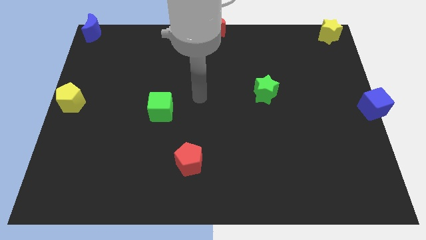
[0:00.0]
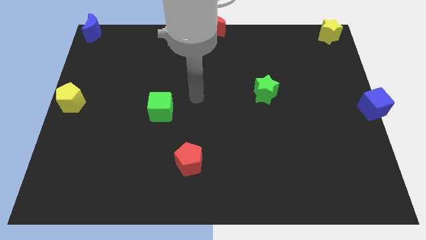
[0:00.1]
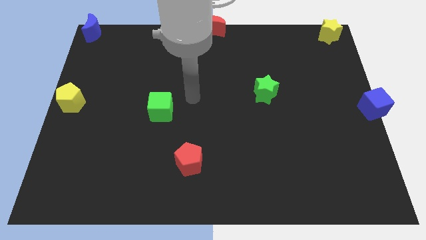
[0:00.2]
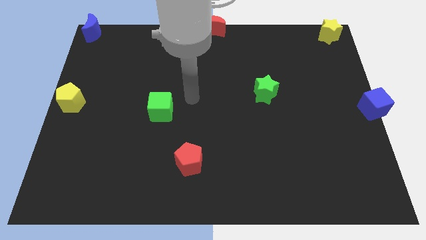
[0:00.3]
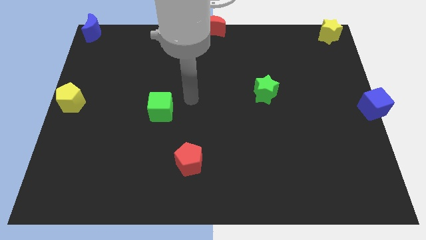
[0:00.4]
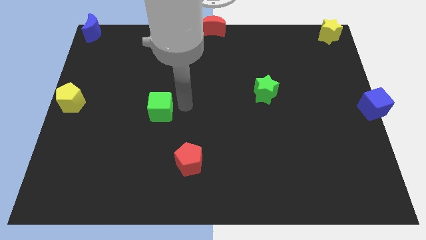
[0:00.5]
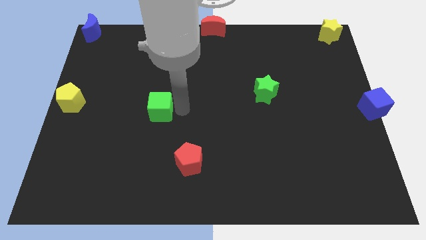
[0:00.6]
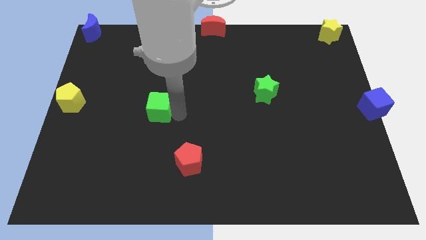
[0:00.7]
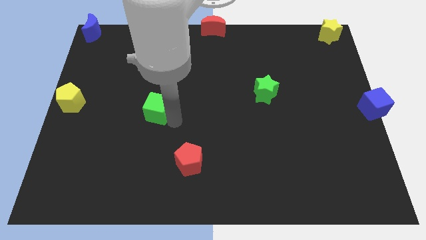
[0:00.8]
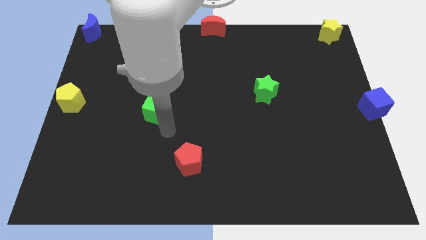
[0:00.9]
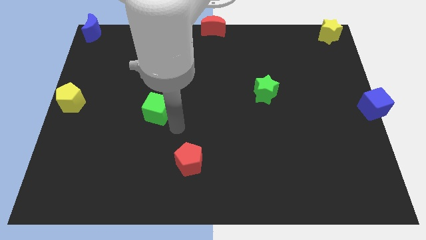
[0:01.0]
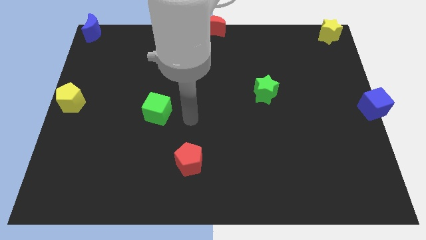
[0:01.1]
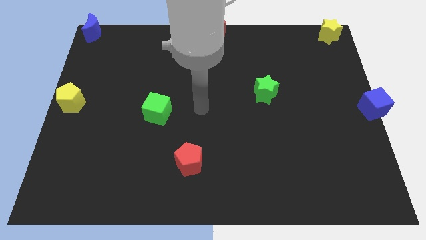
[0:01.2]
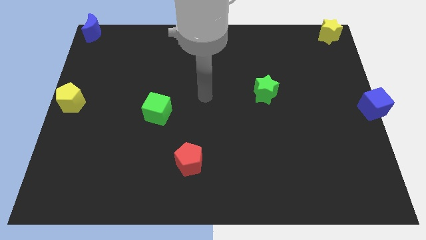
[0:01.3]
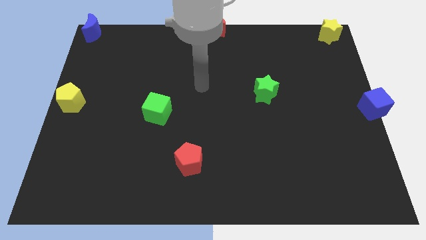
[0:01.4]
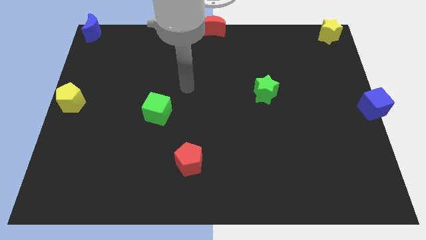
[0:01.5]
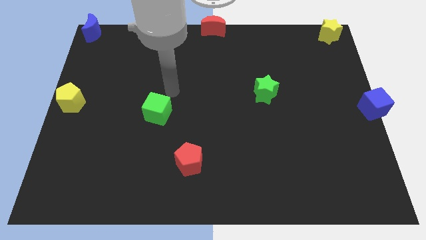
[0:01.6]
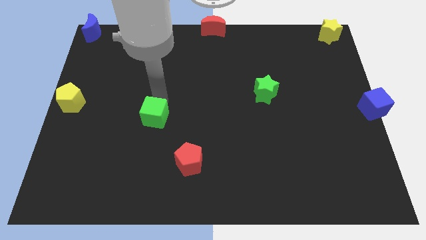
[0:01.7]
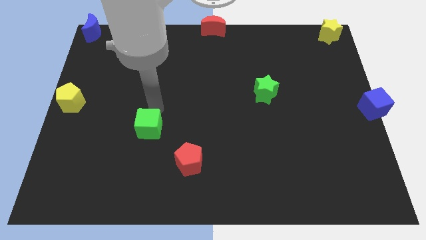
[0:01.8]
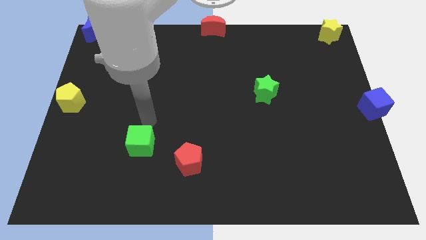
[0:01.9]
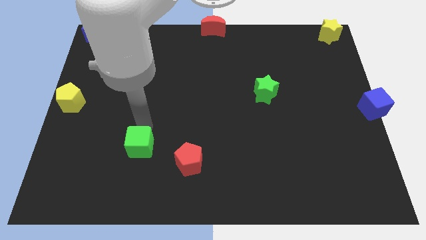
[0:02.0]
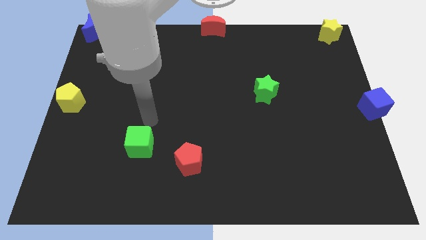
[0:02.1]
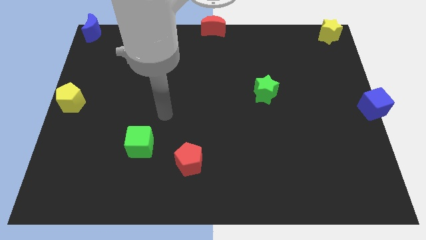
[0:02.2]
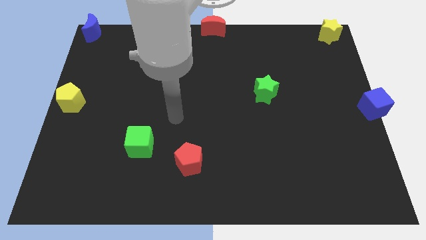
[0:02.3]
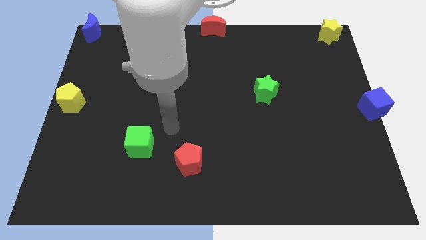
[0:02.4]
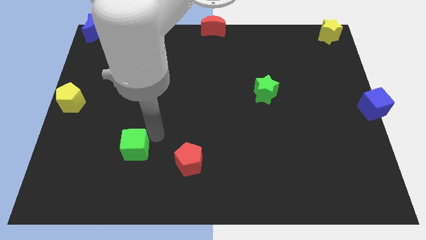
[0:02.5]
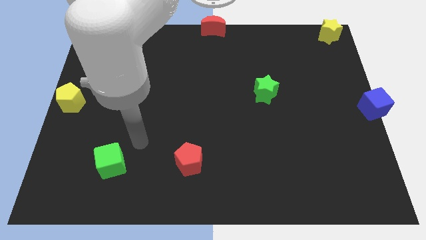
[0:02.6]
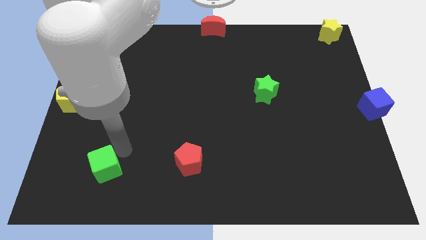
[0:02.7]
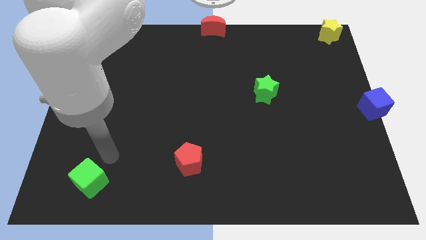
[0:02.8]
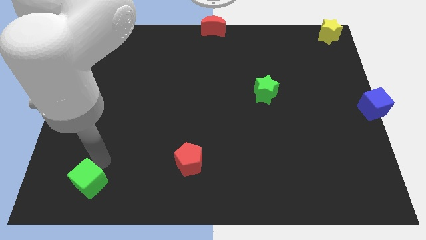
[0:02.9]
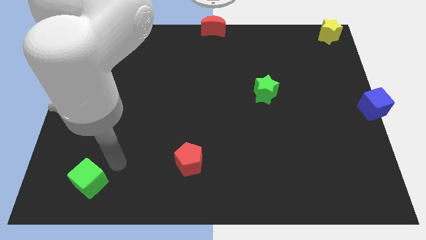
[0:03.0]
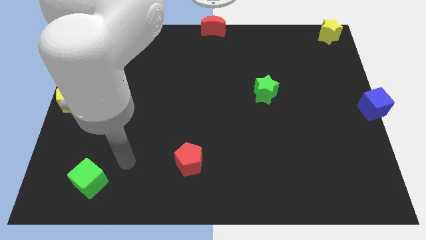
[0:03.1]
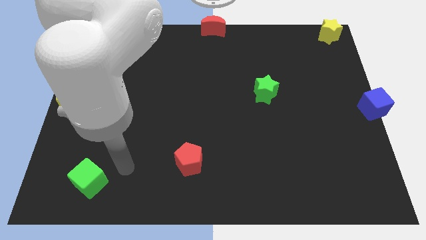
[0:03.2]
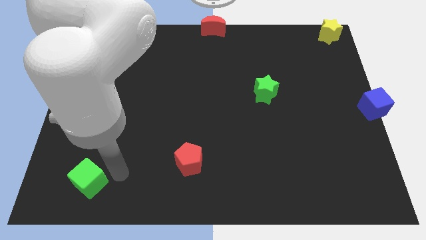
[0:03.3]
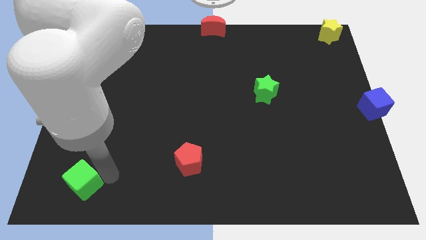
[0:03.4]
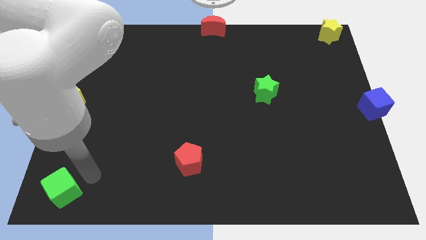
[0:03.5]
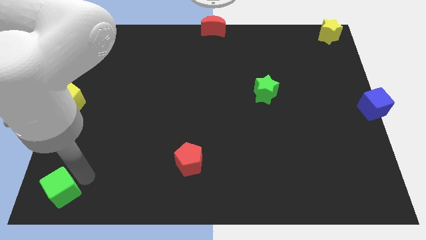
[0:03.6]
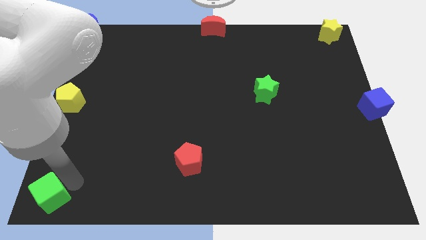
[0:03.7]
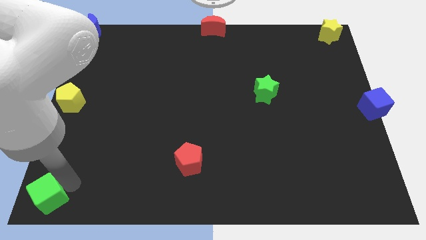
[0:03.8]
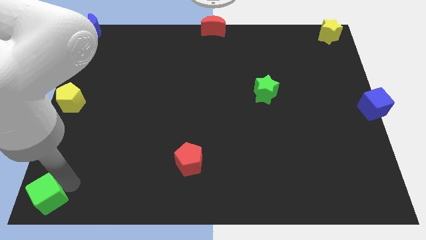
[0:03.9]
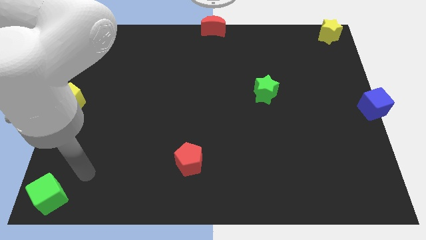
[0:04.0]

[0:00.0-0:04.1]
slide green cube to the bottom left

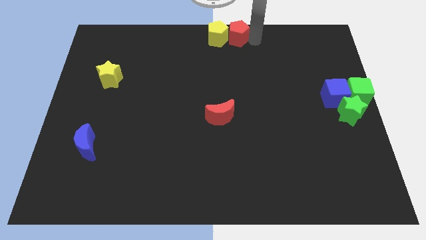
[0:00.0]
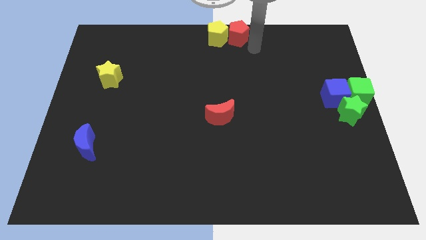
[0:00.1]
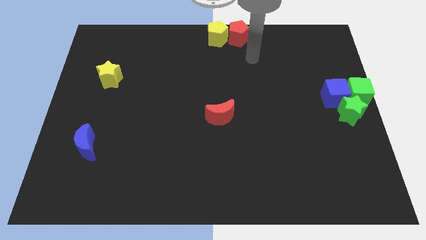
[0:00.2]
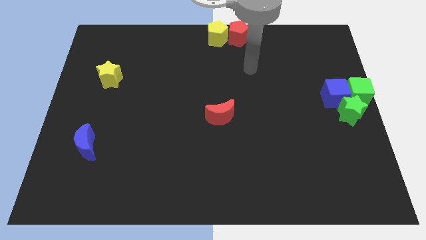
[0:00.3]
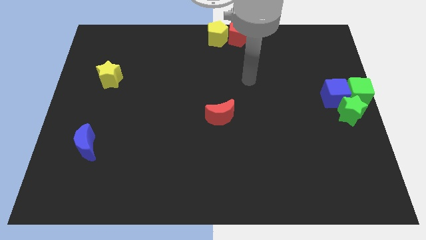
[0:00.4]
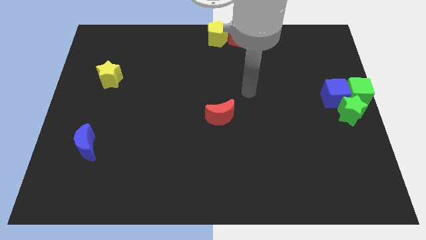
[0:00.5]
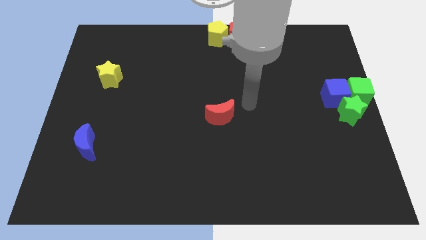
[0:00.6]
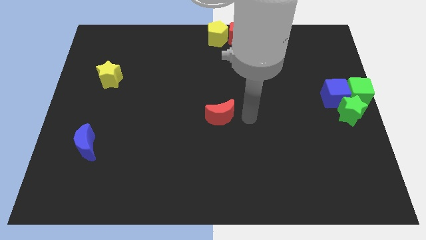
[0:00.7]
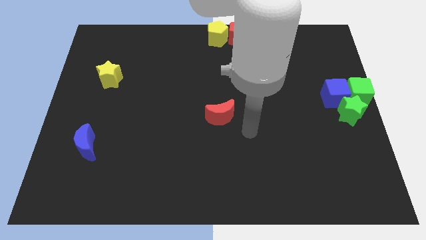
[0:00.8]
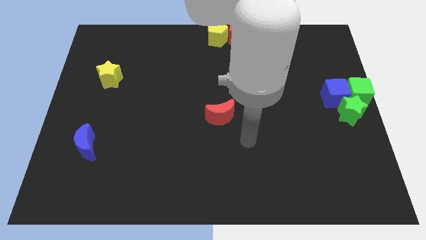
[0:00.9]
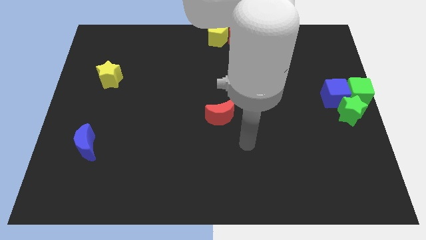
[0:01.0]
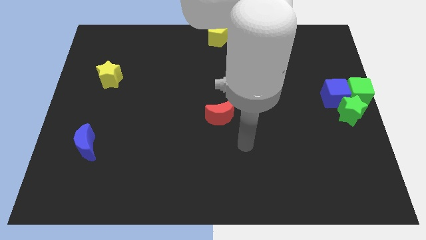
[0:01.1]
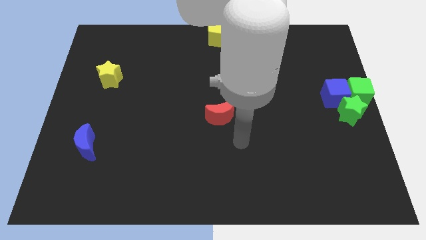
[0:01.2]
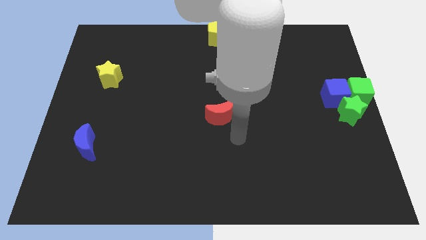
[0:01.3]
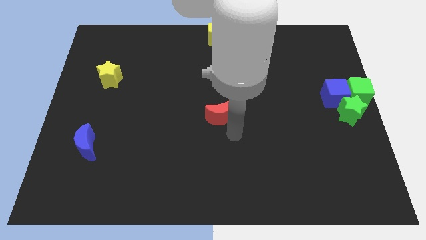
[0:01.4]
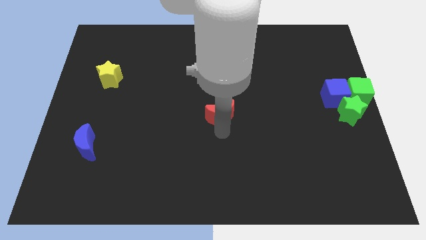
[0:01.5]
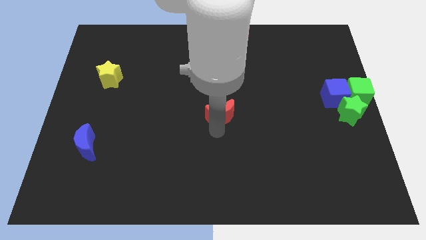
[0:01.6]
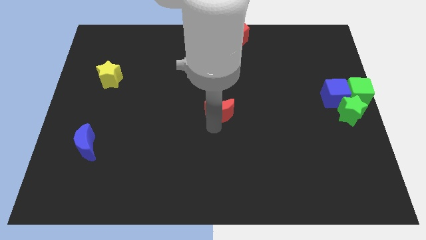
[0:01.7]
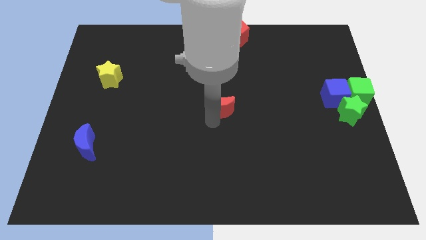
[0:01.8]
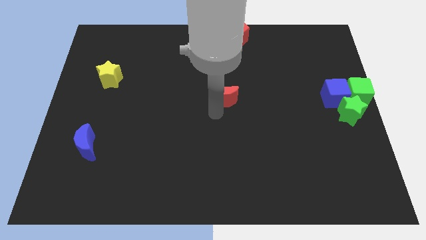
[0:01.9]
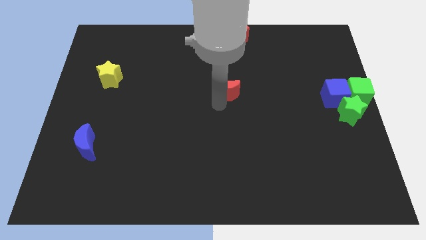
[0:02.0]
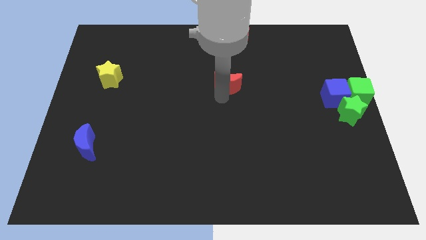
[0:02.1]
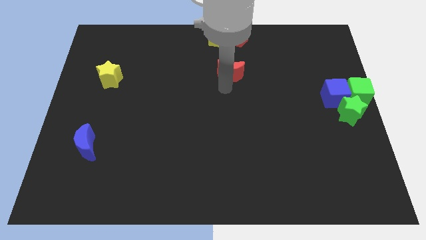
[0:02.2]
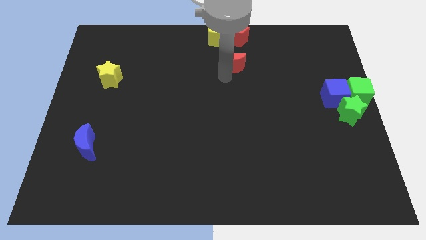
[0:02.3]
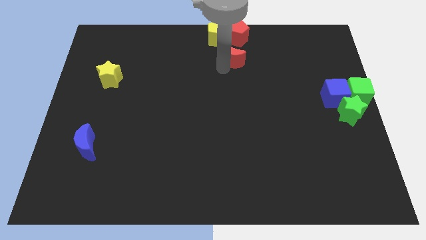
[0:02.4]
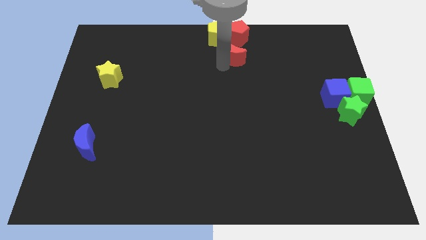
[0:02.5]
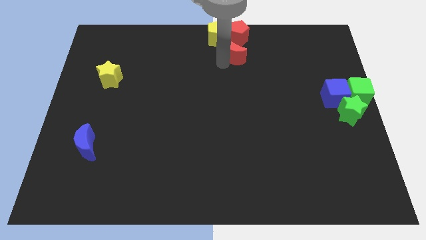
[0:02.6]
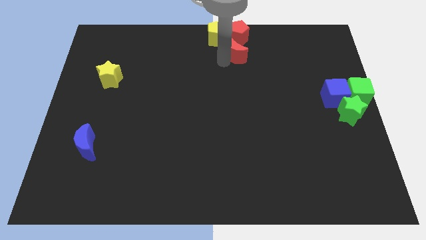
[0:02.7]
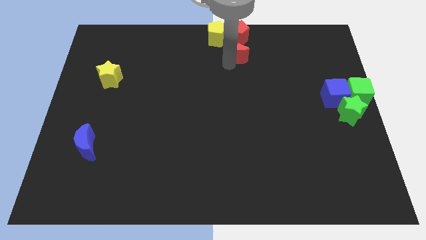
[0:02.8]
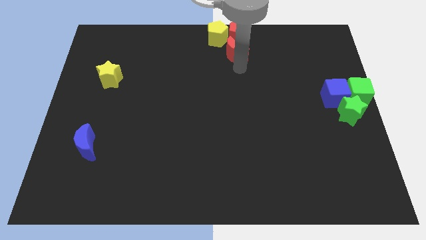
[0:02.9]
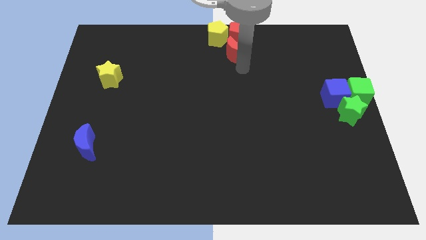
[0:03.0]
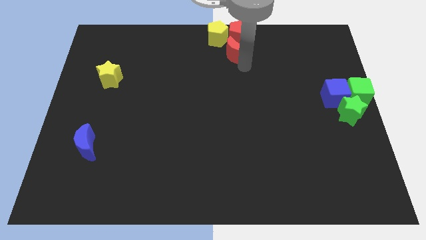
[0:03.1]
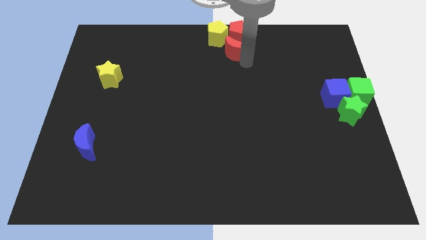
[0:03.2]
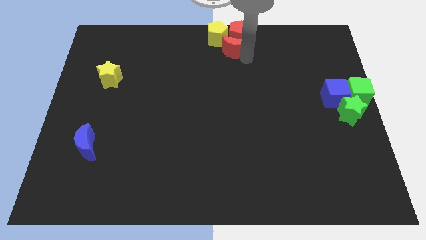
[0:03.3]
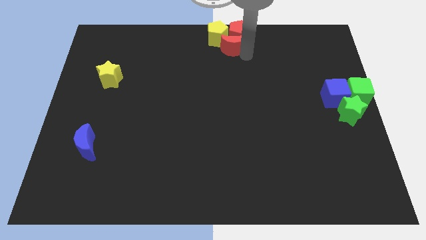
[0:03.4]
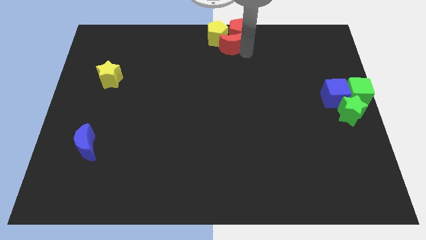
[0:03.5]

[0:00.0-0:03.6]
move the red crescent to the bottom of the red pentagon

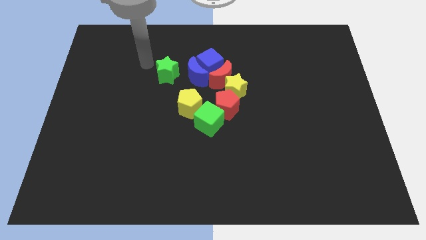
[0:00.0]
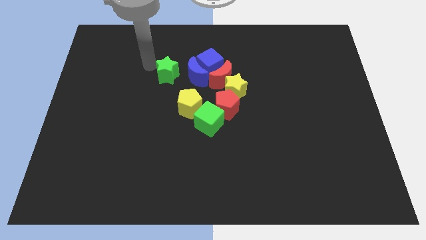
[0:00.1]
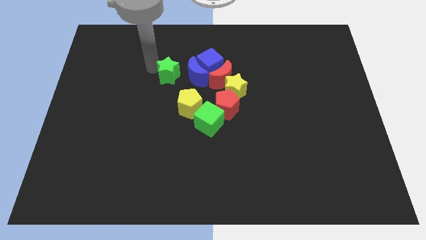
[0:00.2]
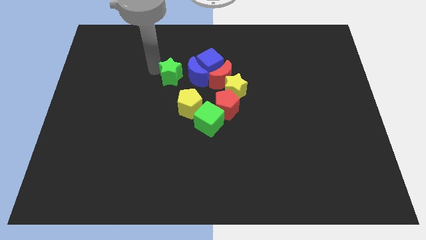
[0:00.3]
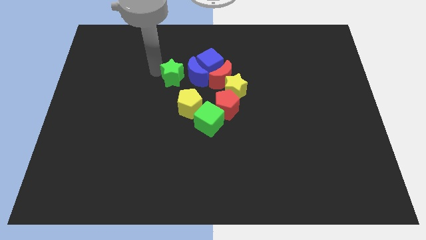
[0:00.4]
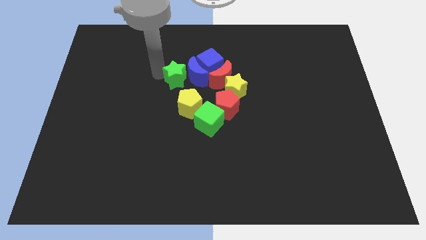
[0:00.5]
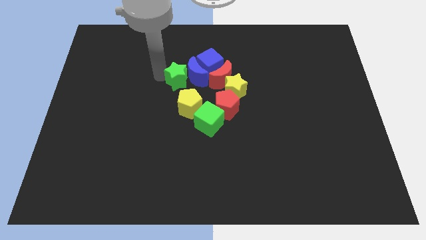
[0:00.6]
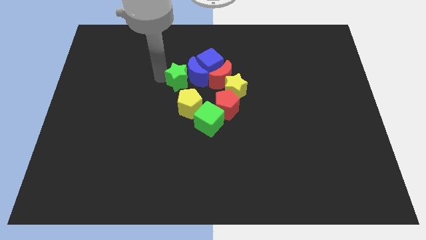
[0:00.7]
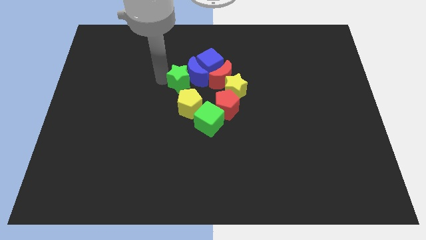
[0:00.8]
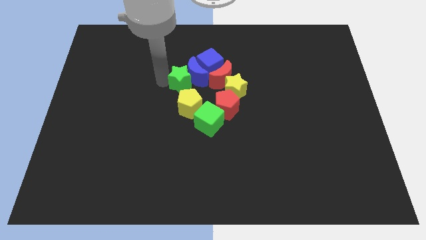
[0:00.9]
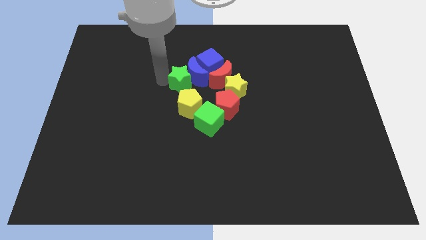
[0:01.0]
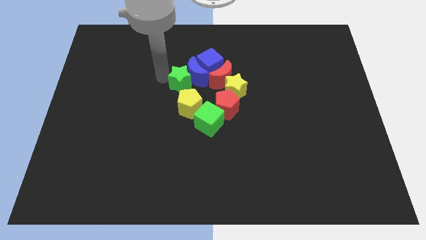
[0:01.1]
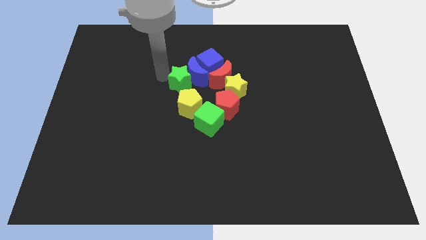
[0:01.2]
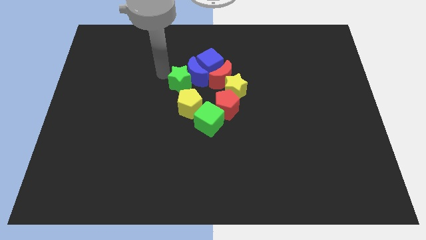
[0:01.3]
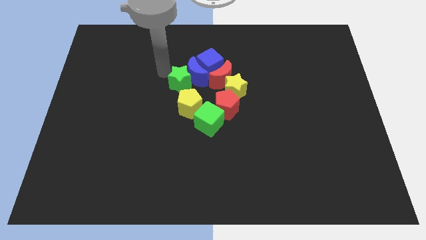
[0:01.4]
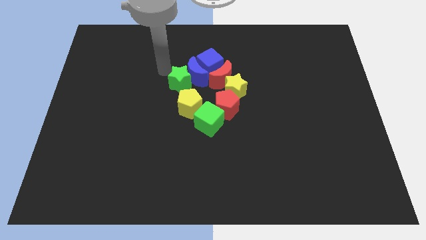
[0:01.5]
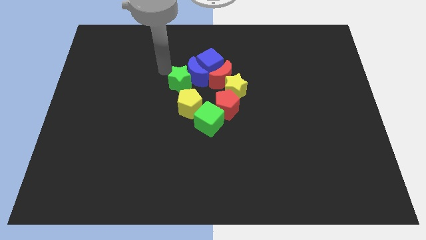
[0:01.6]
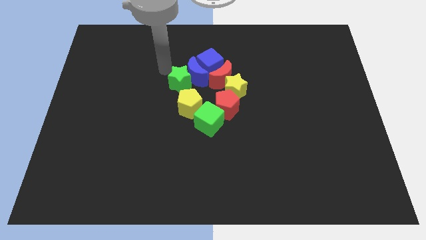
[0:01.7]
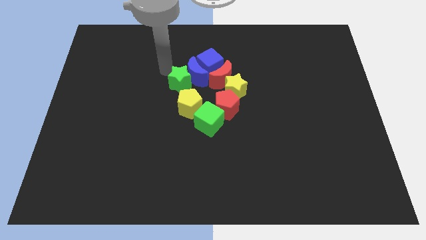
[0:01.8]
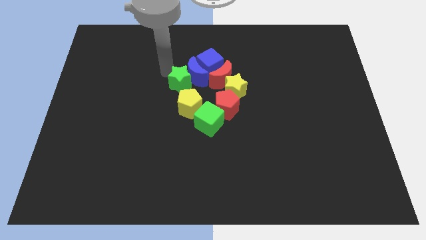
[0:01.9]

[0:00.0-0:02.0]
move the green star to the left of the blue crescent
